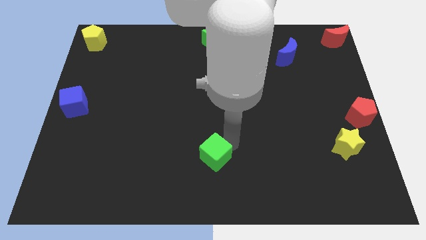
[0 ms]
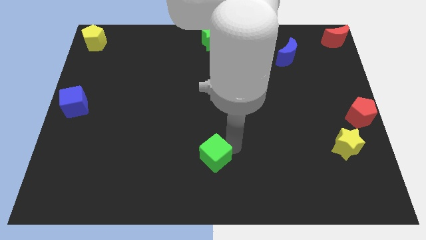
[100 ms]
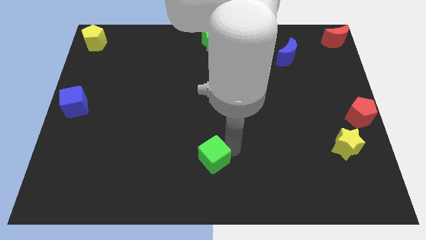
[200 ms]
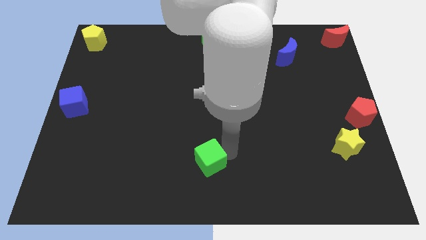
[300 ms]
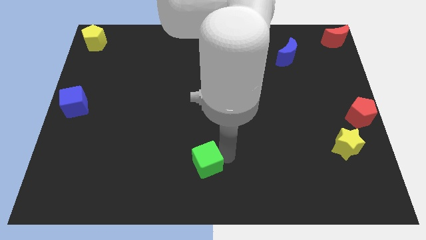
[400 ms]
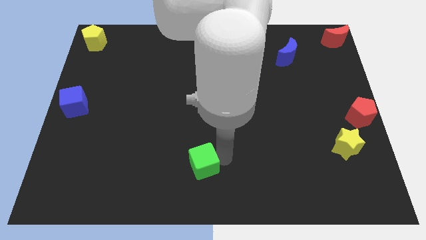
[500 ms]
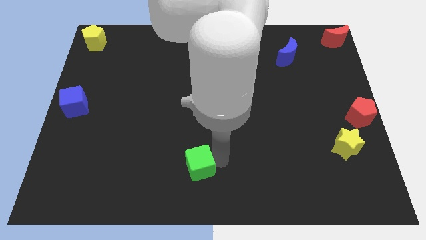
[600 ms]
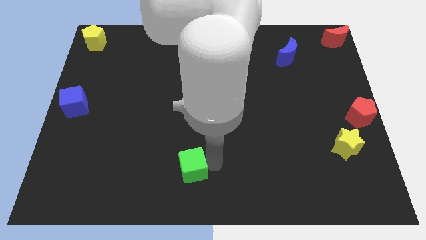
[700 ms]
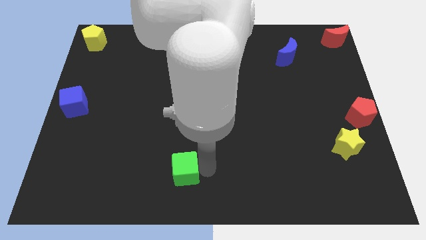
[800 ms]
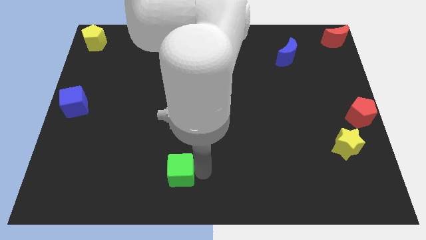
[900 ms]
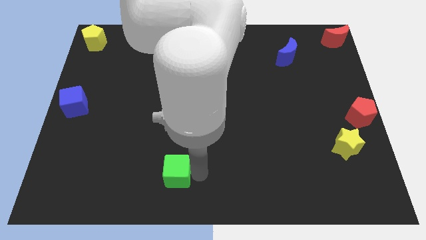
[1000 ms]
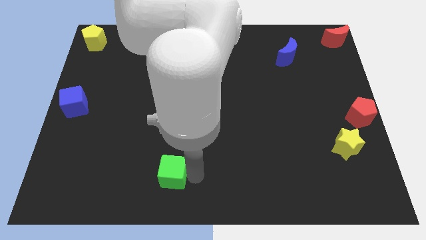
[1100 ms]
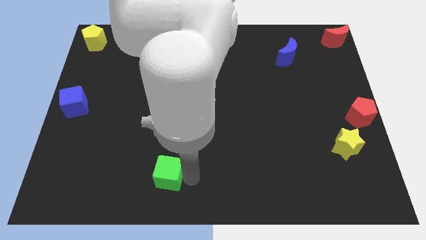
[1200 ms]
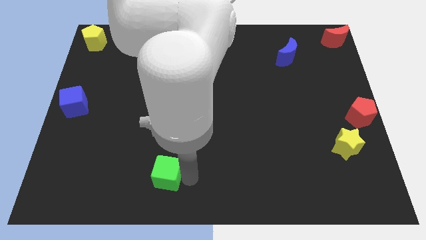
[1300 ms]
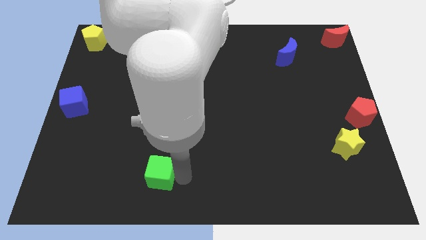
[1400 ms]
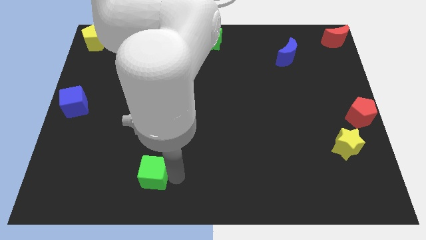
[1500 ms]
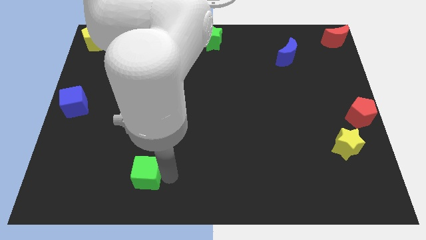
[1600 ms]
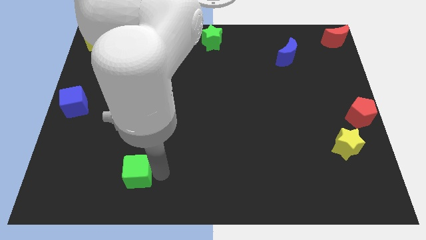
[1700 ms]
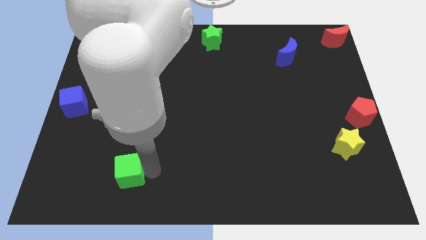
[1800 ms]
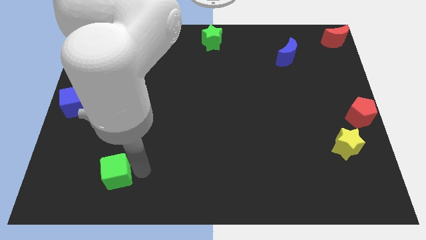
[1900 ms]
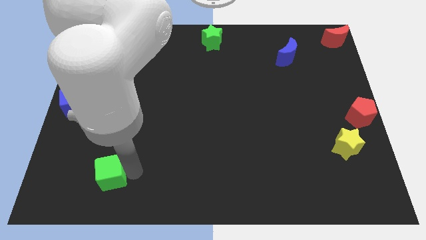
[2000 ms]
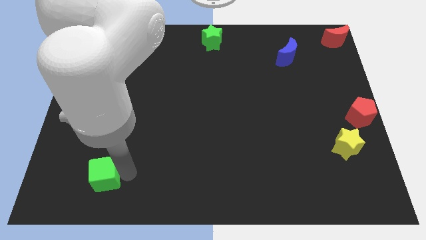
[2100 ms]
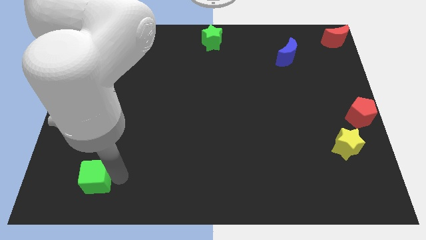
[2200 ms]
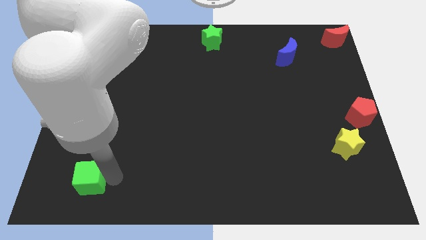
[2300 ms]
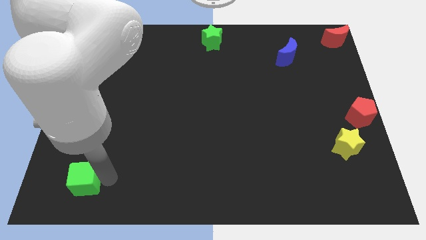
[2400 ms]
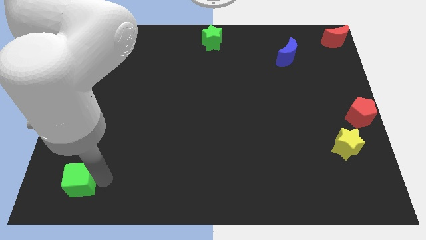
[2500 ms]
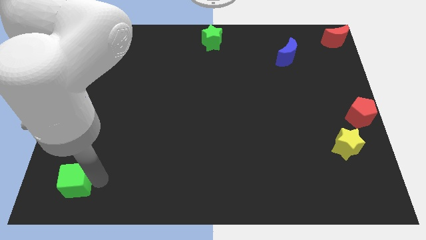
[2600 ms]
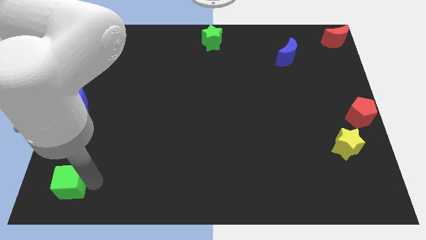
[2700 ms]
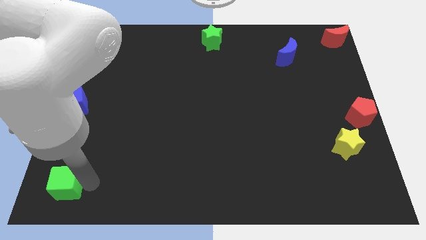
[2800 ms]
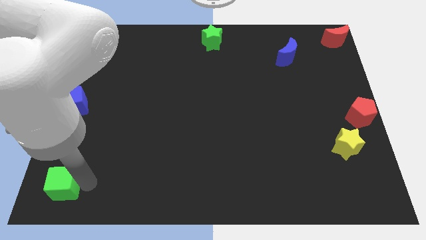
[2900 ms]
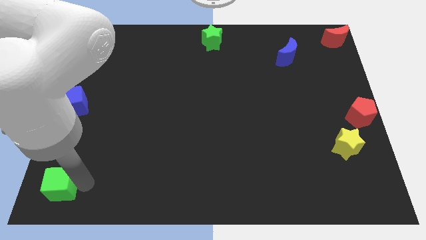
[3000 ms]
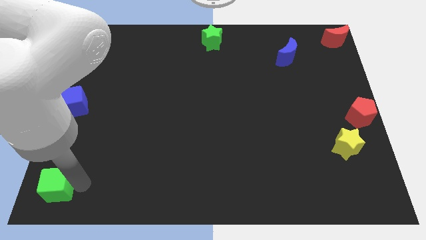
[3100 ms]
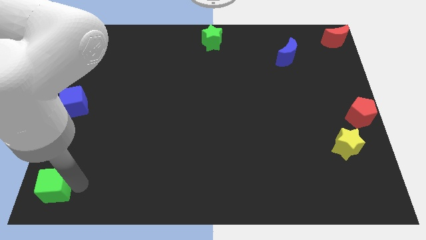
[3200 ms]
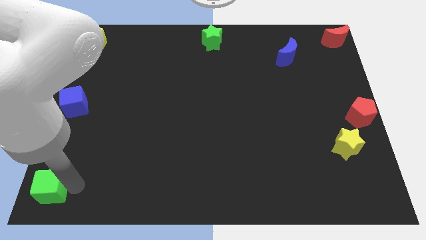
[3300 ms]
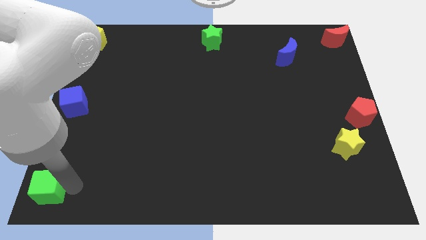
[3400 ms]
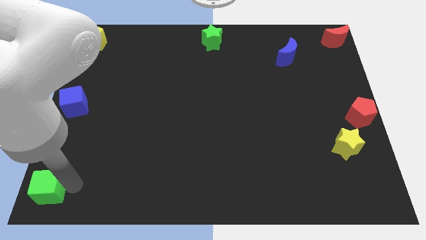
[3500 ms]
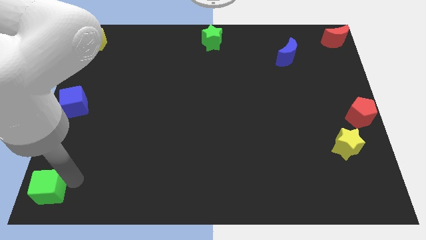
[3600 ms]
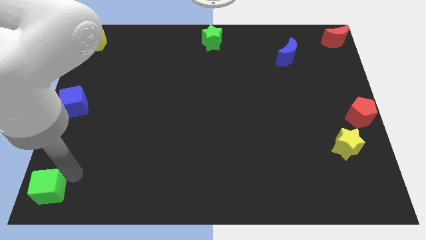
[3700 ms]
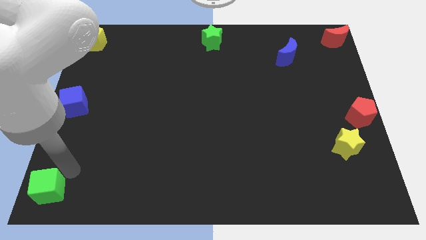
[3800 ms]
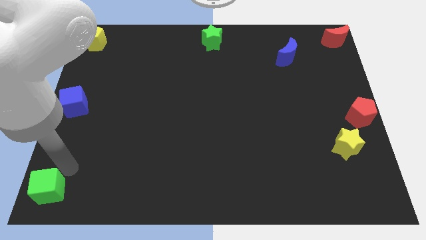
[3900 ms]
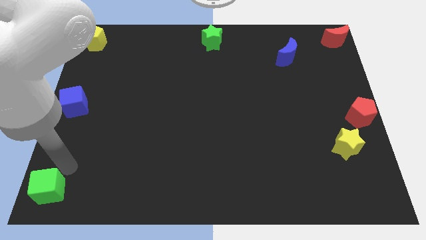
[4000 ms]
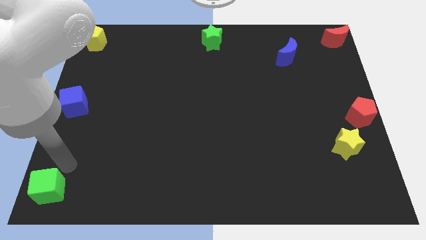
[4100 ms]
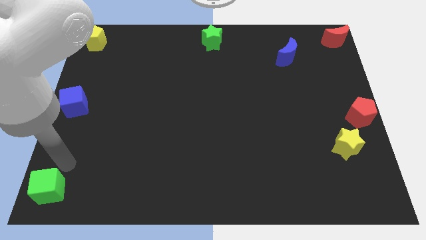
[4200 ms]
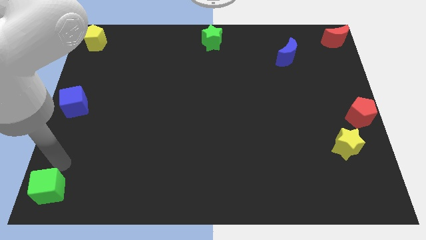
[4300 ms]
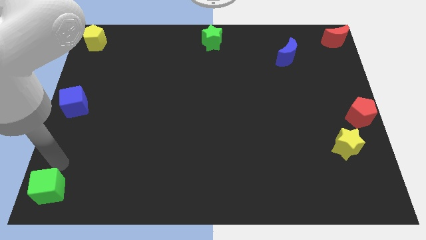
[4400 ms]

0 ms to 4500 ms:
push the green cube vertically below the blue cube

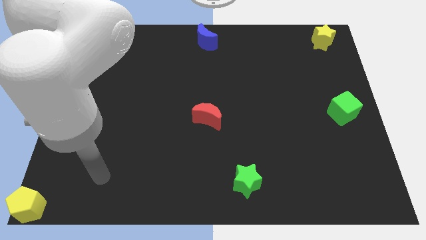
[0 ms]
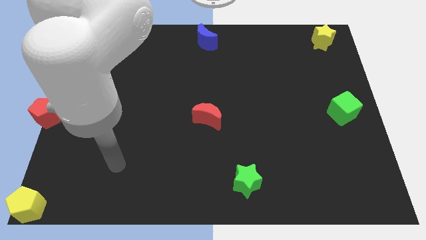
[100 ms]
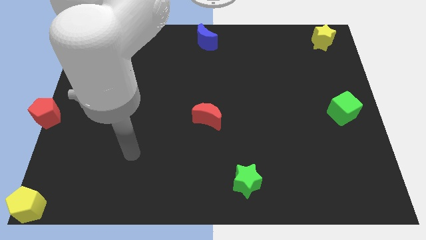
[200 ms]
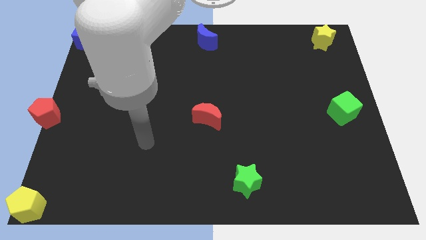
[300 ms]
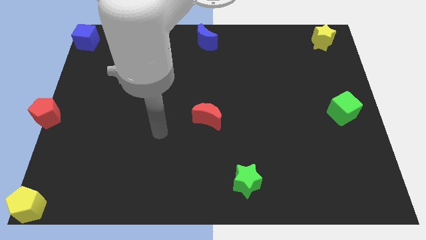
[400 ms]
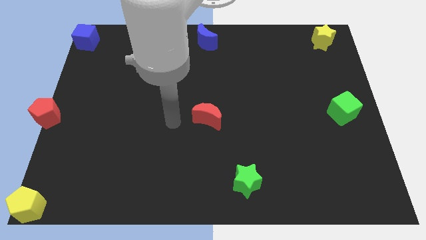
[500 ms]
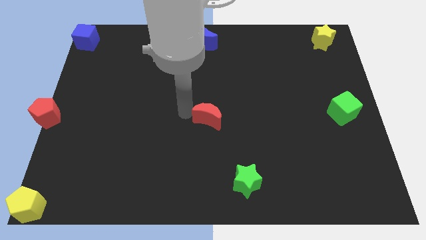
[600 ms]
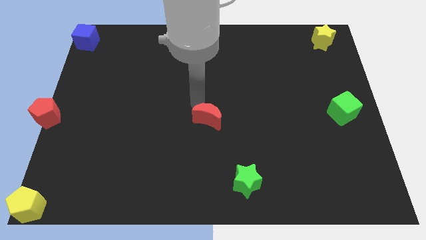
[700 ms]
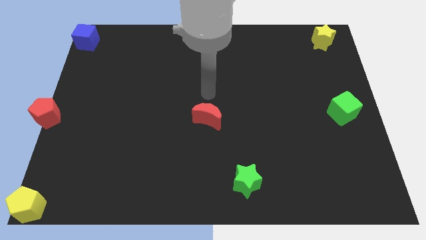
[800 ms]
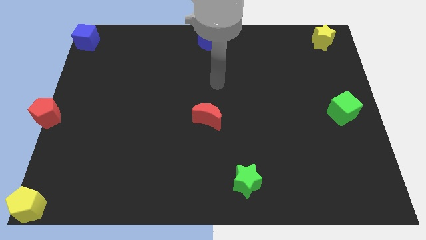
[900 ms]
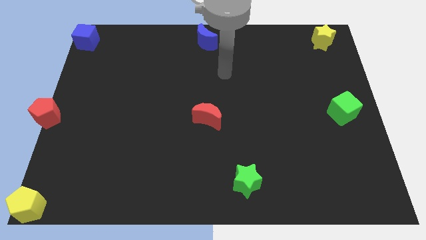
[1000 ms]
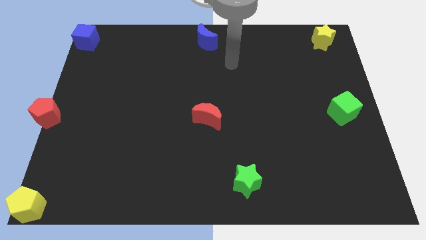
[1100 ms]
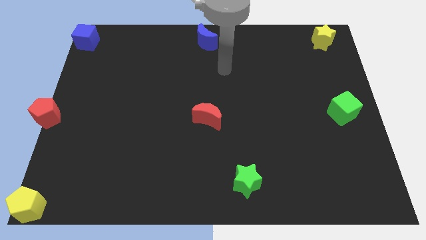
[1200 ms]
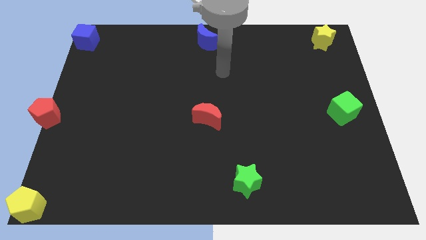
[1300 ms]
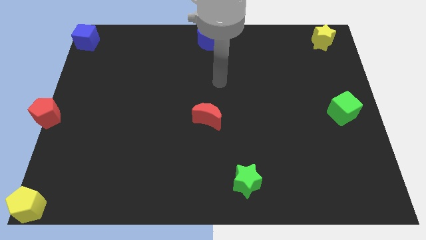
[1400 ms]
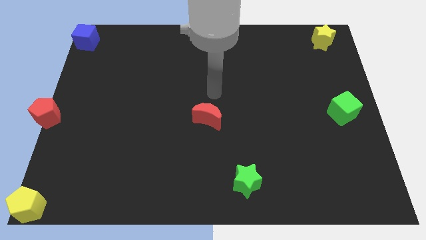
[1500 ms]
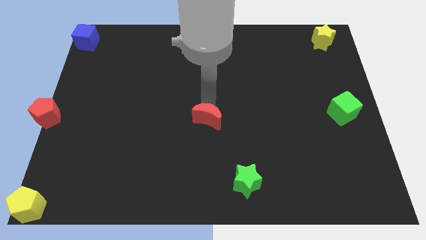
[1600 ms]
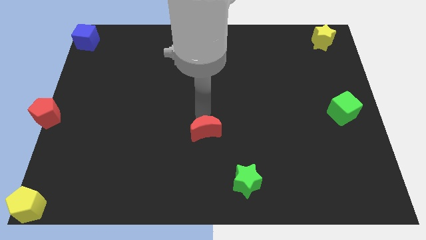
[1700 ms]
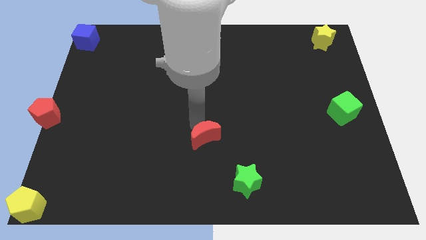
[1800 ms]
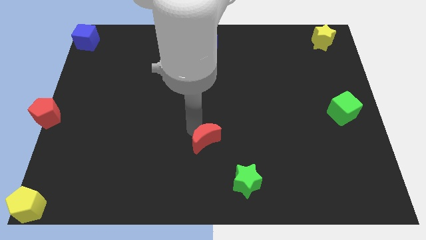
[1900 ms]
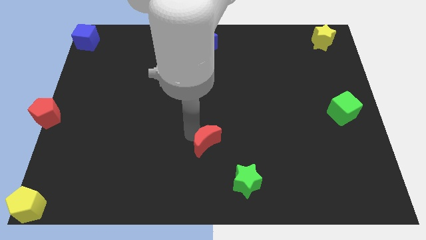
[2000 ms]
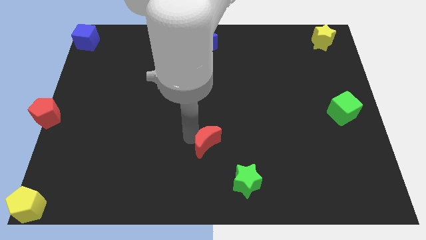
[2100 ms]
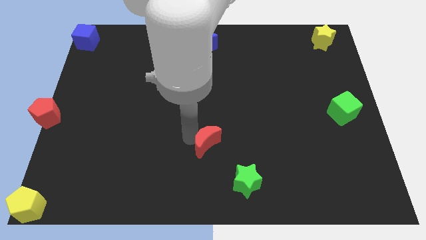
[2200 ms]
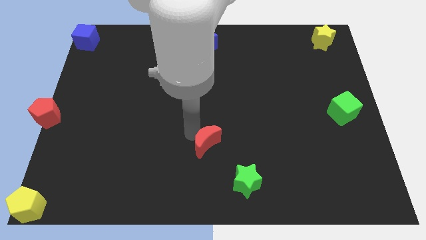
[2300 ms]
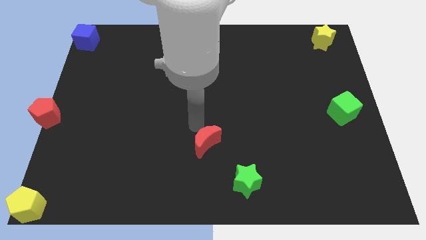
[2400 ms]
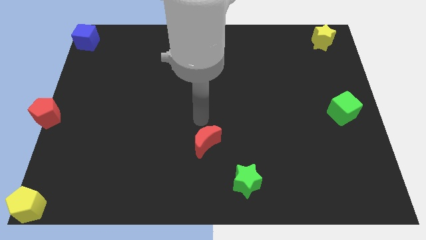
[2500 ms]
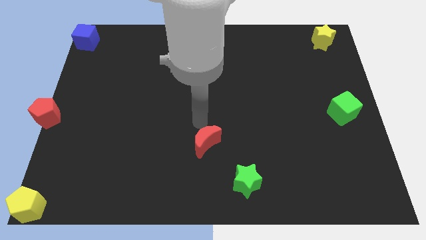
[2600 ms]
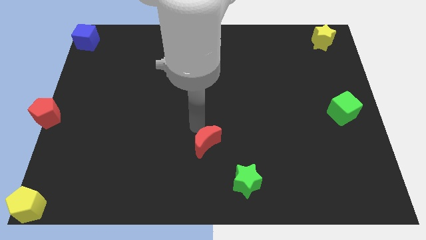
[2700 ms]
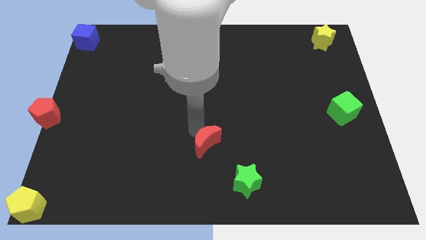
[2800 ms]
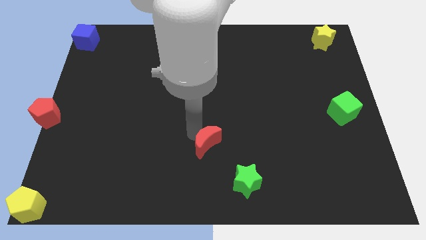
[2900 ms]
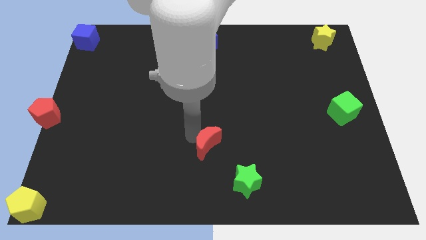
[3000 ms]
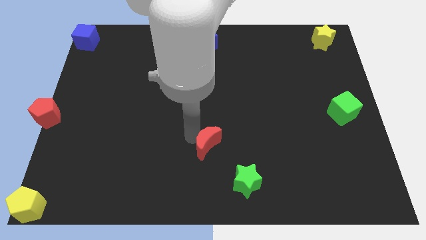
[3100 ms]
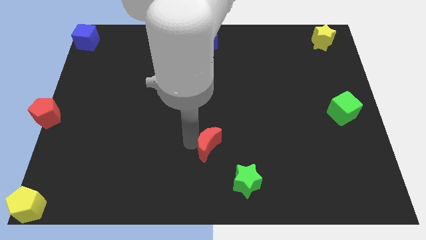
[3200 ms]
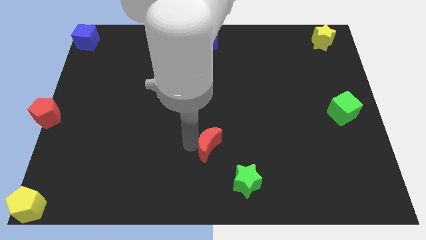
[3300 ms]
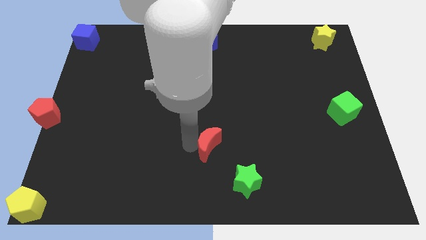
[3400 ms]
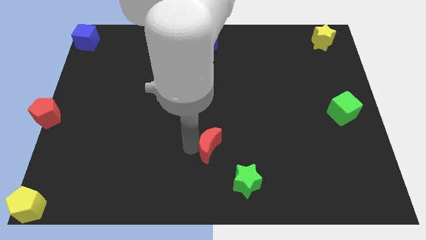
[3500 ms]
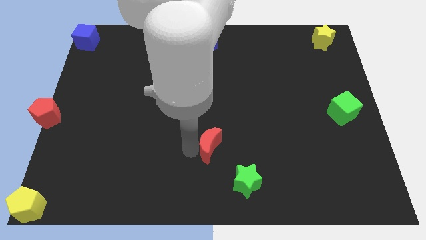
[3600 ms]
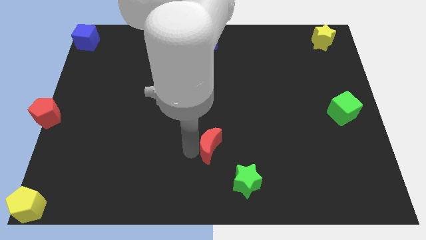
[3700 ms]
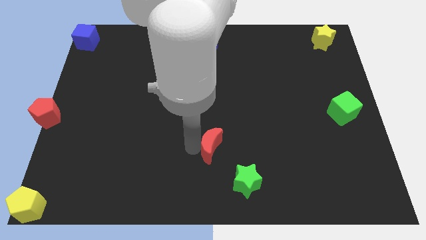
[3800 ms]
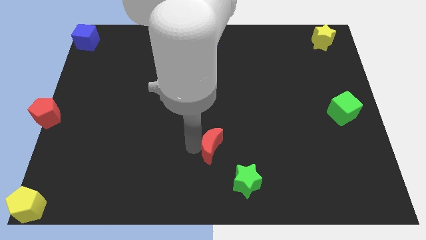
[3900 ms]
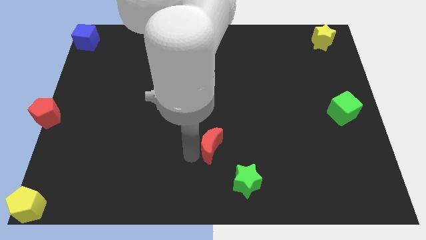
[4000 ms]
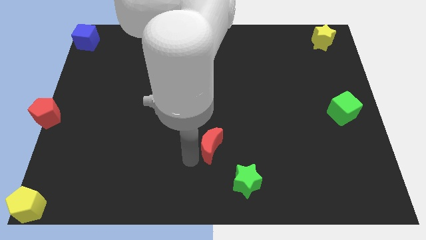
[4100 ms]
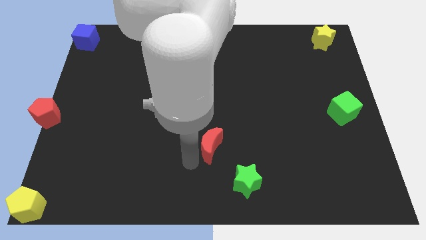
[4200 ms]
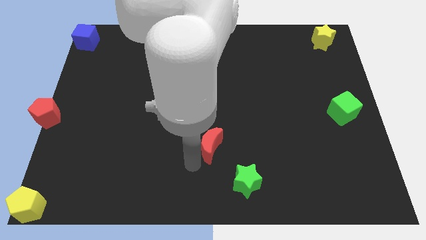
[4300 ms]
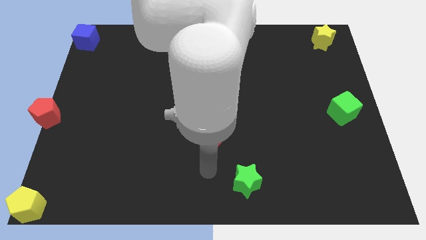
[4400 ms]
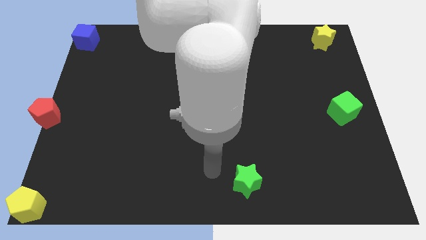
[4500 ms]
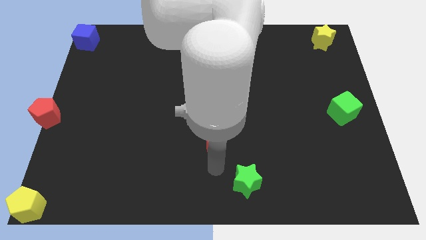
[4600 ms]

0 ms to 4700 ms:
move the red crescent towards the green star
